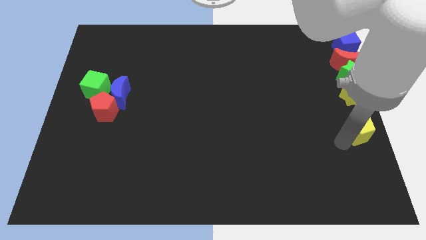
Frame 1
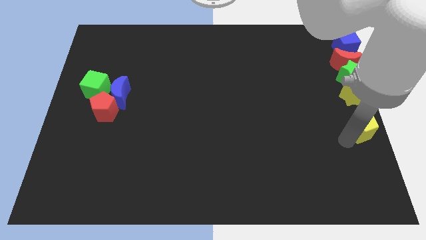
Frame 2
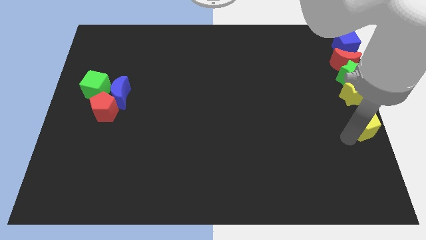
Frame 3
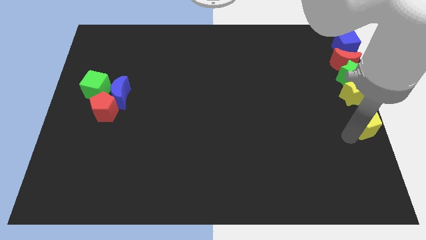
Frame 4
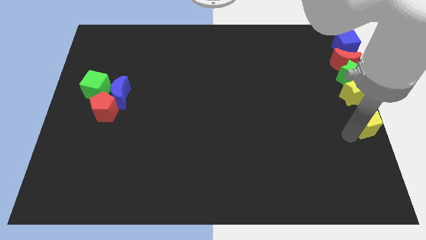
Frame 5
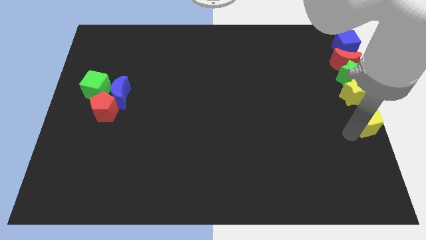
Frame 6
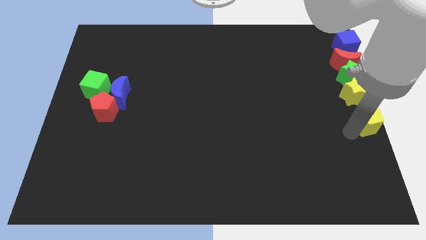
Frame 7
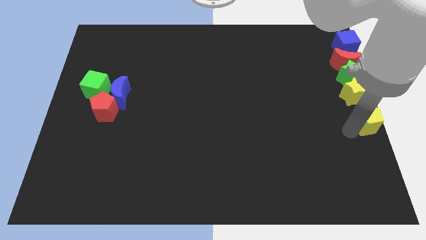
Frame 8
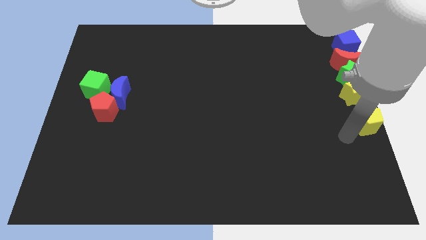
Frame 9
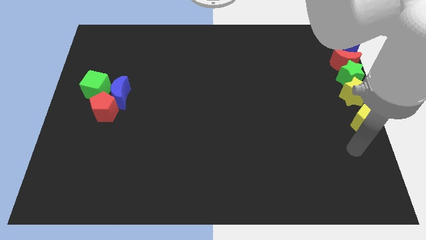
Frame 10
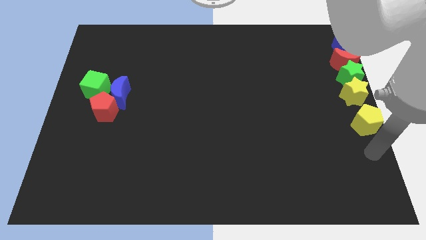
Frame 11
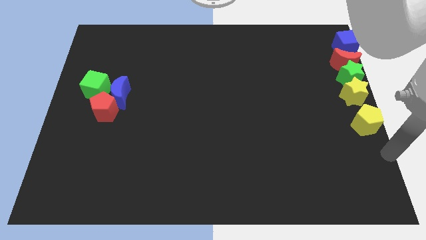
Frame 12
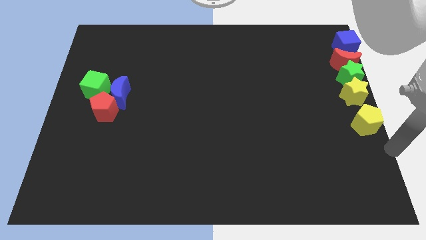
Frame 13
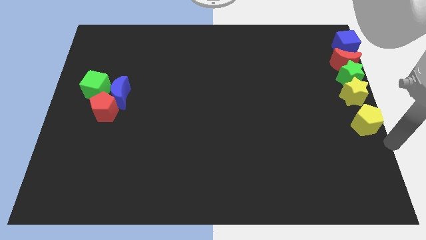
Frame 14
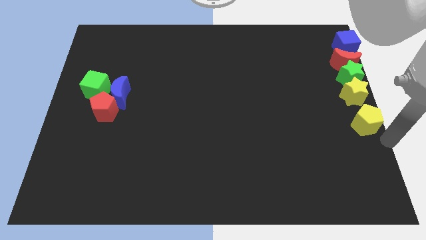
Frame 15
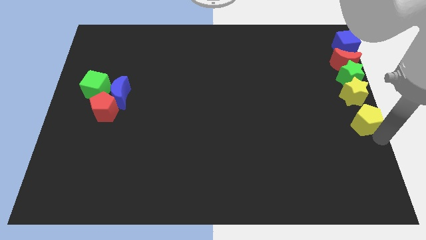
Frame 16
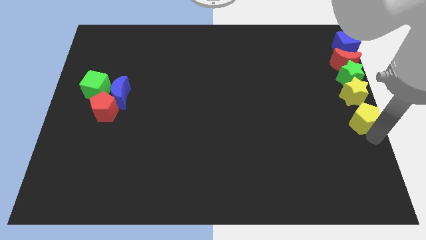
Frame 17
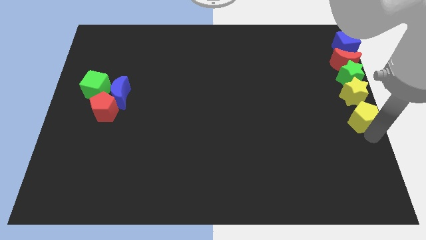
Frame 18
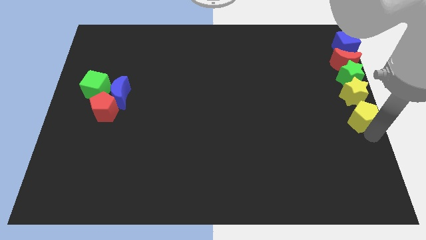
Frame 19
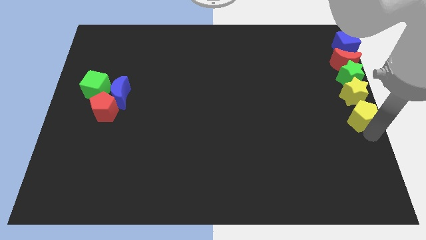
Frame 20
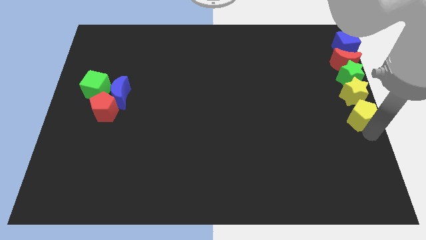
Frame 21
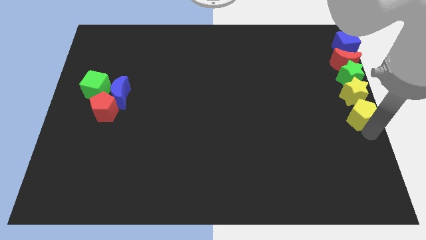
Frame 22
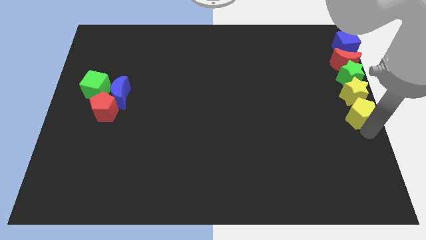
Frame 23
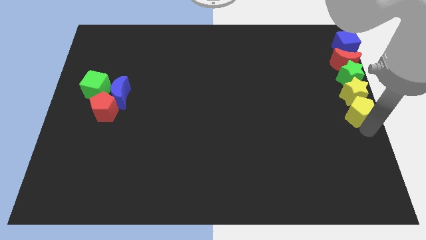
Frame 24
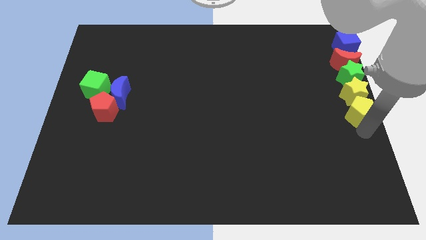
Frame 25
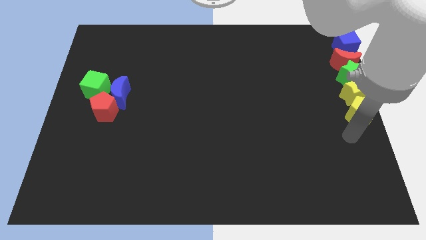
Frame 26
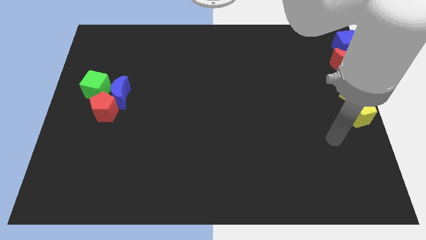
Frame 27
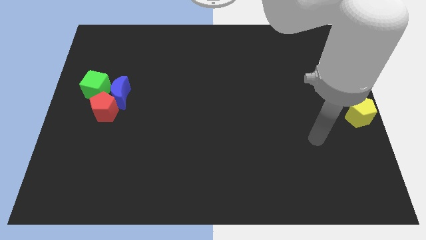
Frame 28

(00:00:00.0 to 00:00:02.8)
place yellow pentagon below to the yellow star

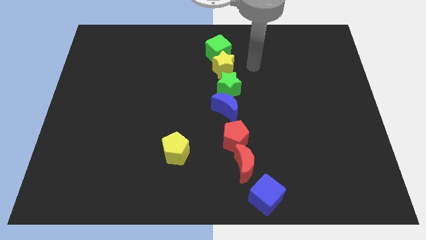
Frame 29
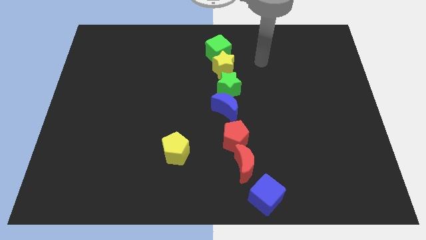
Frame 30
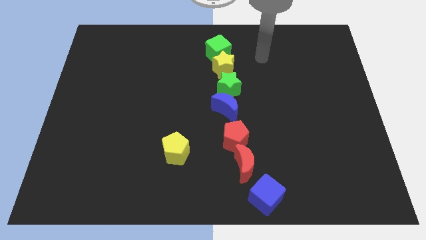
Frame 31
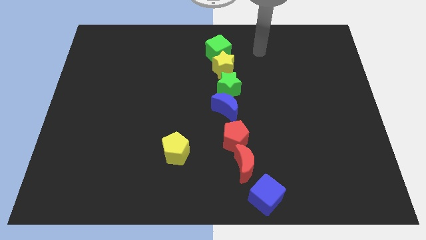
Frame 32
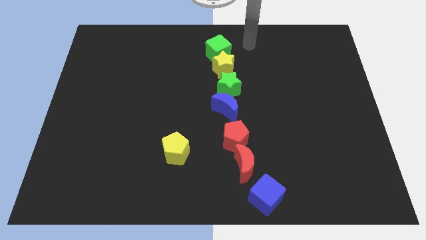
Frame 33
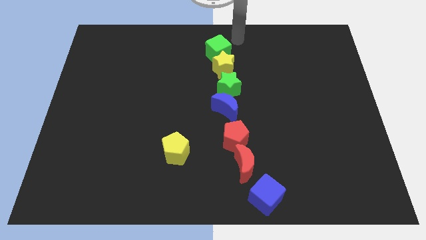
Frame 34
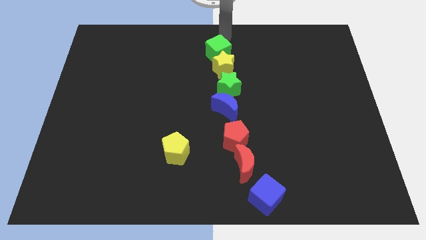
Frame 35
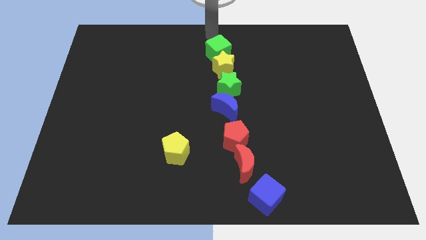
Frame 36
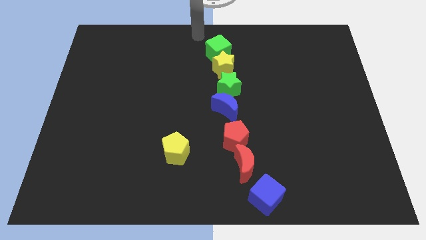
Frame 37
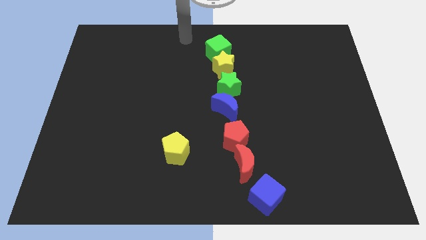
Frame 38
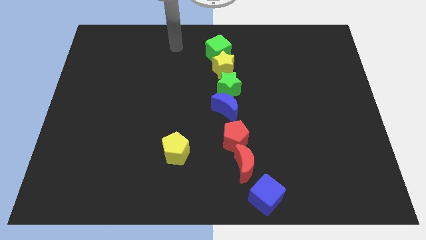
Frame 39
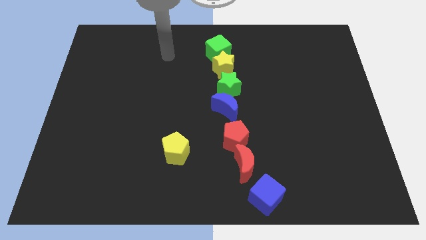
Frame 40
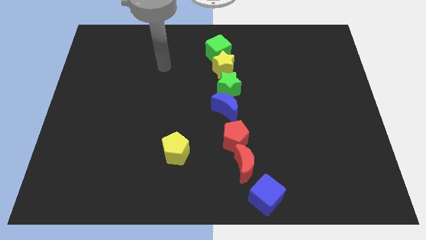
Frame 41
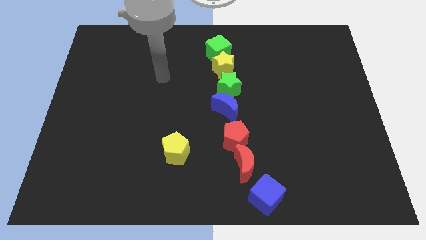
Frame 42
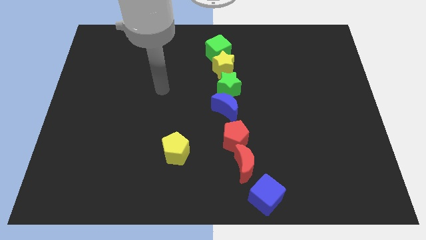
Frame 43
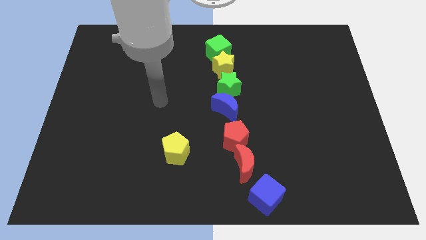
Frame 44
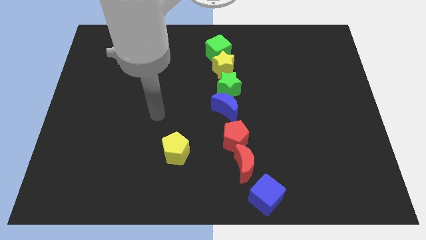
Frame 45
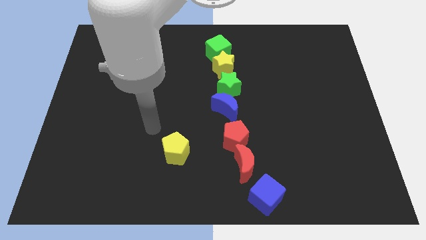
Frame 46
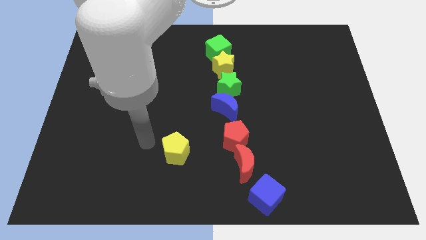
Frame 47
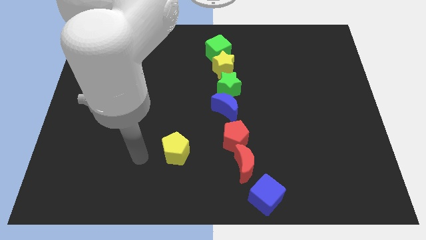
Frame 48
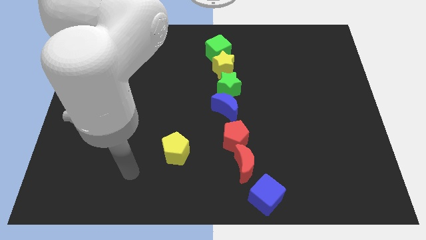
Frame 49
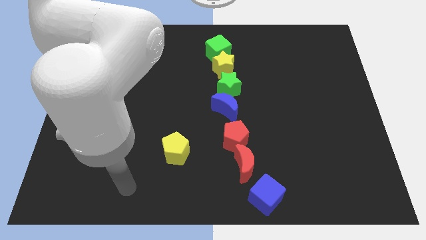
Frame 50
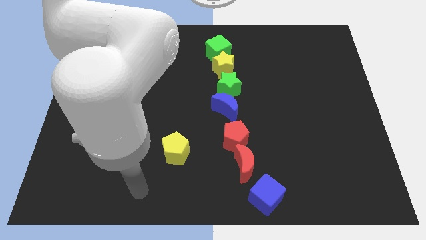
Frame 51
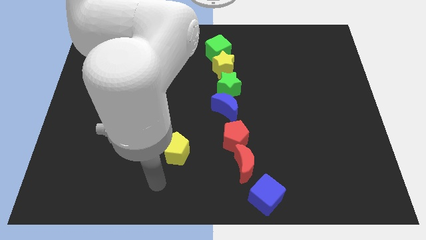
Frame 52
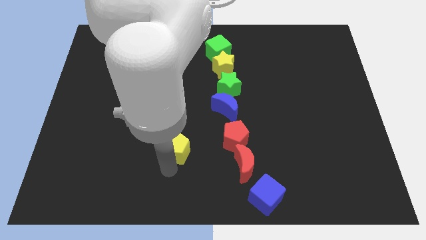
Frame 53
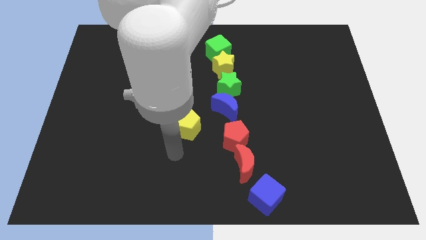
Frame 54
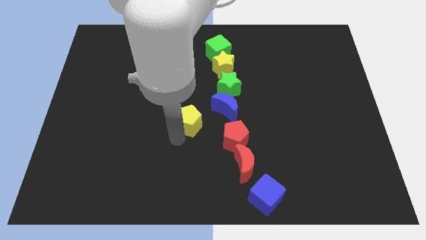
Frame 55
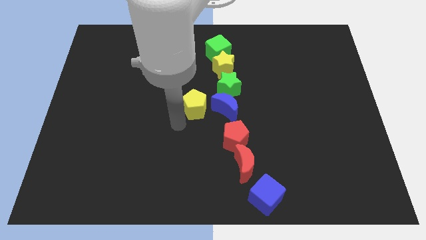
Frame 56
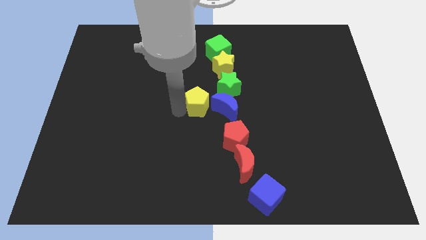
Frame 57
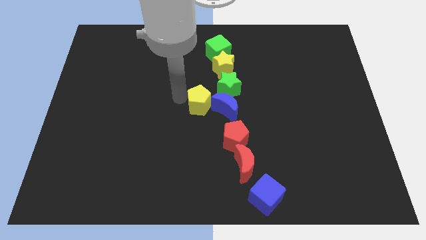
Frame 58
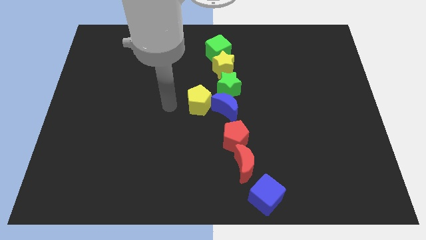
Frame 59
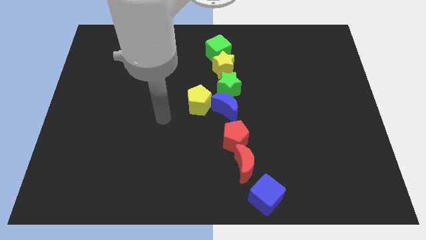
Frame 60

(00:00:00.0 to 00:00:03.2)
place the yellow pentagon to the left of the blue crescent

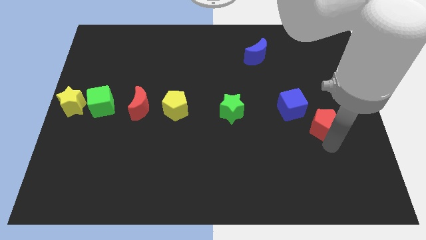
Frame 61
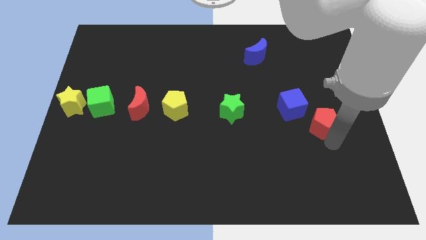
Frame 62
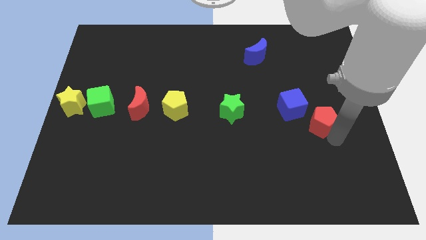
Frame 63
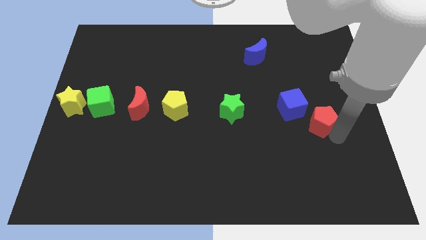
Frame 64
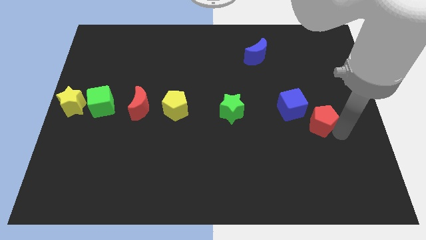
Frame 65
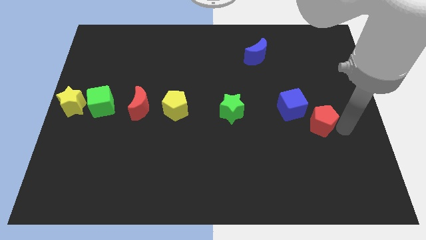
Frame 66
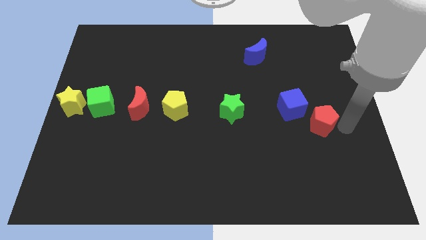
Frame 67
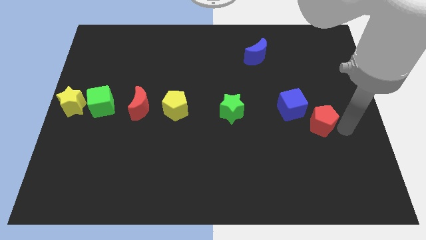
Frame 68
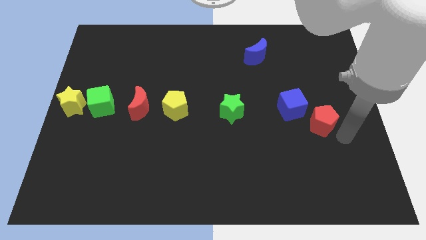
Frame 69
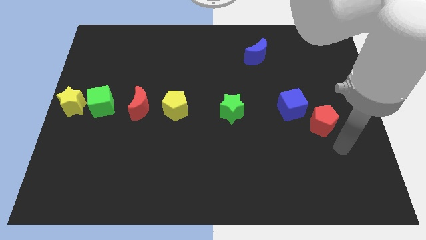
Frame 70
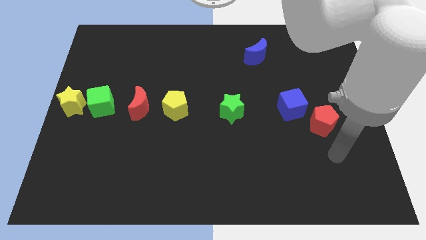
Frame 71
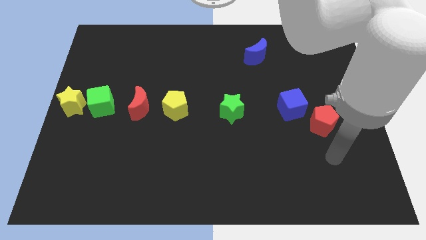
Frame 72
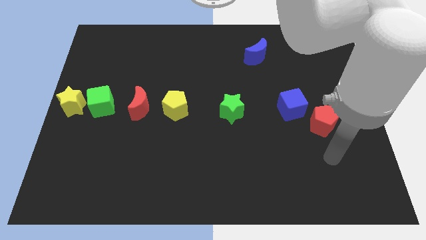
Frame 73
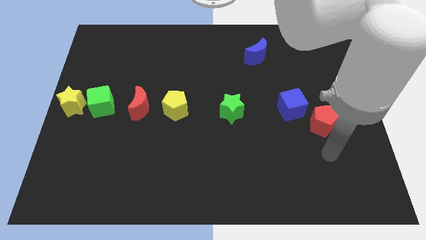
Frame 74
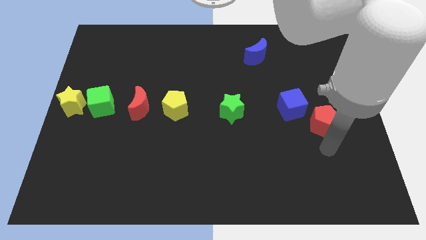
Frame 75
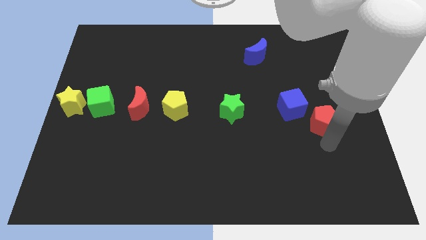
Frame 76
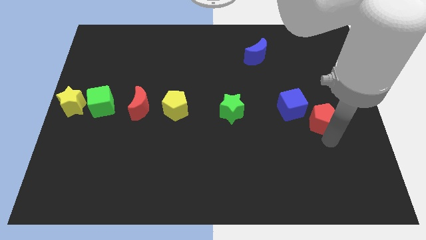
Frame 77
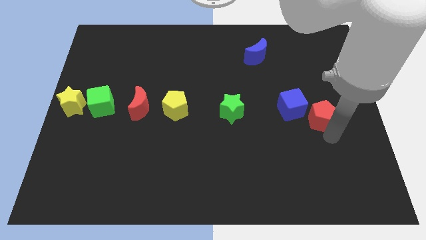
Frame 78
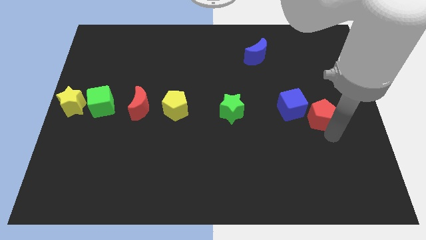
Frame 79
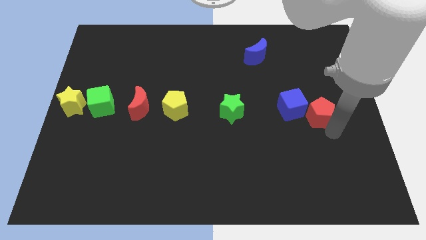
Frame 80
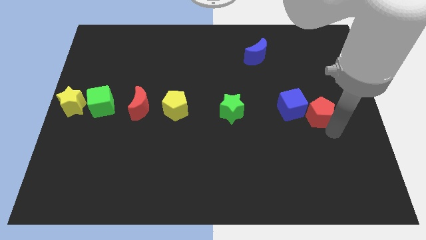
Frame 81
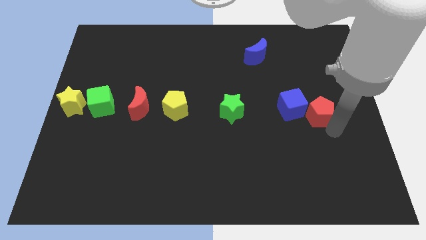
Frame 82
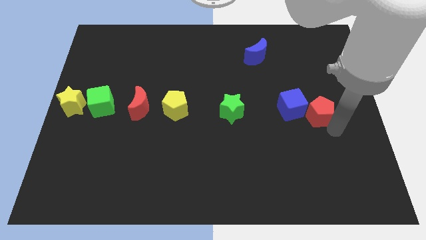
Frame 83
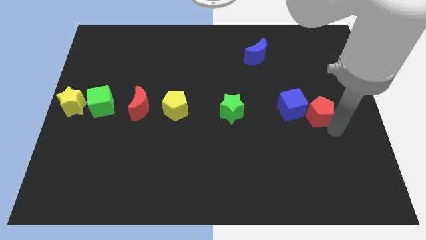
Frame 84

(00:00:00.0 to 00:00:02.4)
move the red pentagon close to the blue cube

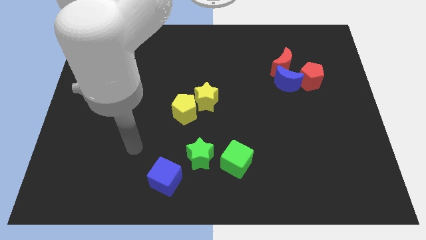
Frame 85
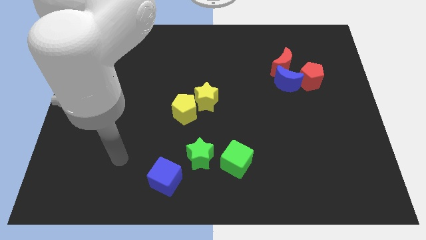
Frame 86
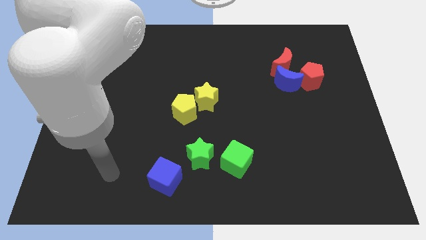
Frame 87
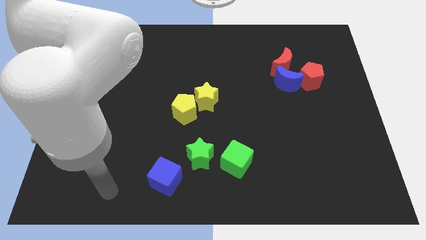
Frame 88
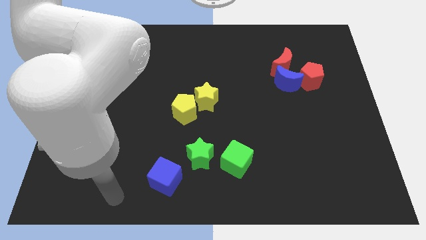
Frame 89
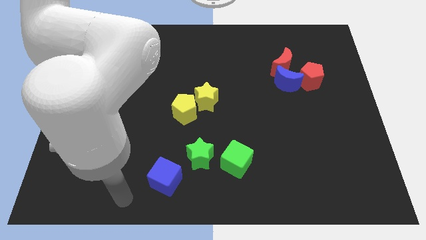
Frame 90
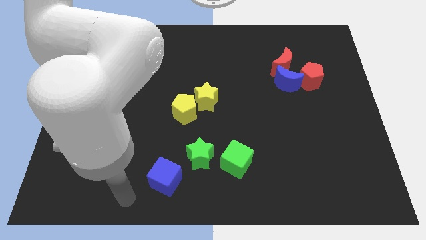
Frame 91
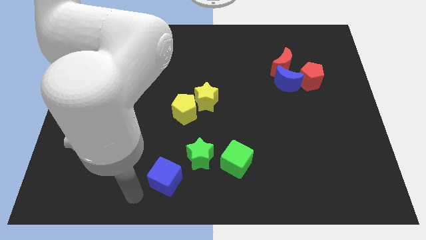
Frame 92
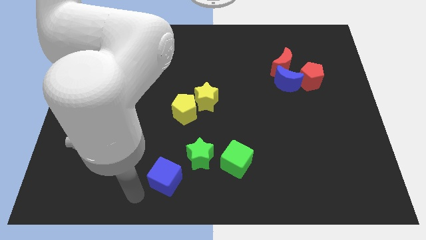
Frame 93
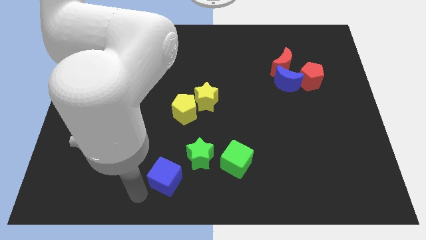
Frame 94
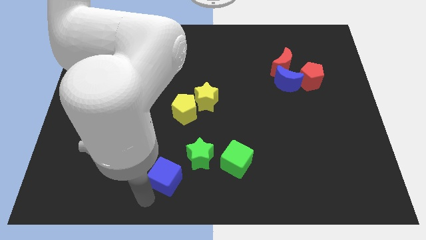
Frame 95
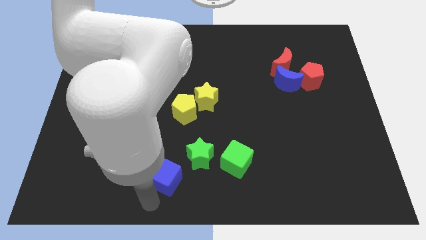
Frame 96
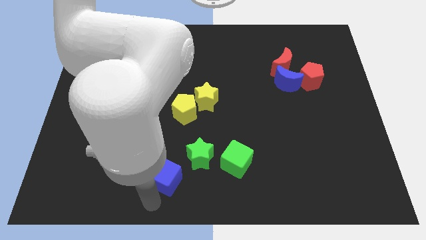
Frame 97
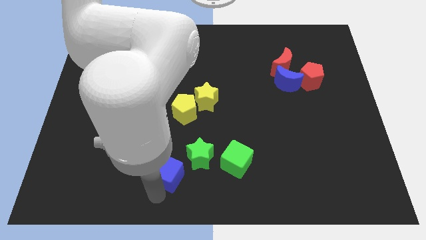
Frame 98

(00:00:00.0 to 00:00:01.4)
move arm close to the blue cube
